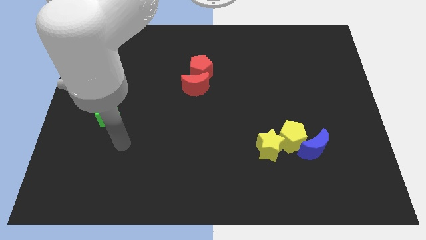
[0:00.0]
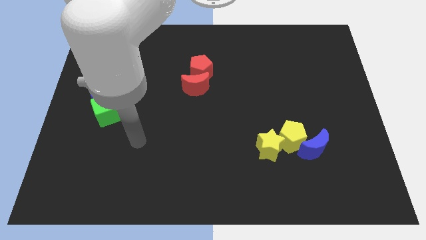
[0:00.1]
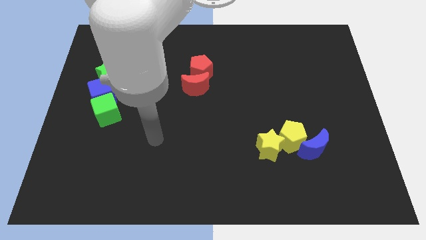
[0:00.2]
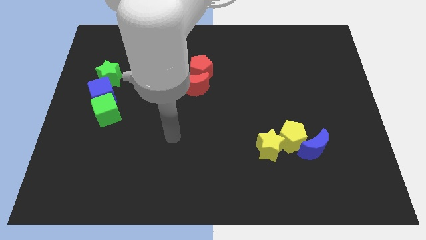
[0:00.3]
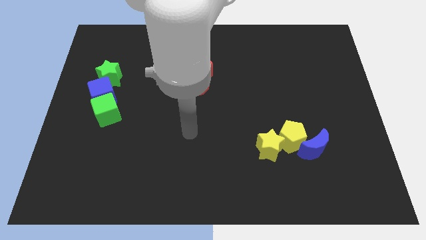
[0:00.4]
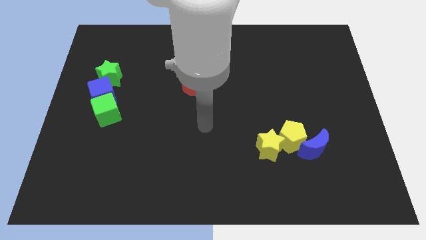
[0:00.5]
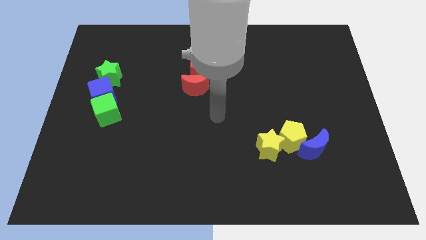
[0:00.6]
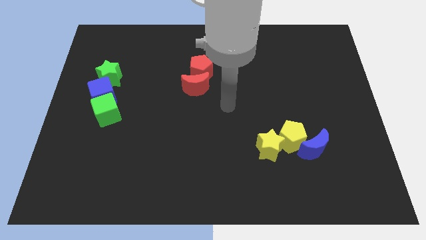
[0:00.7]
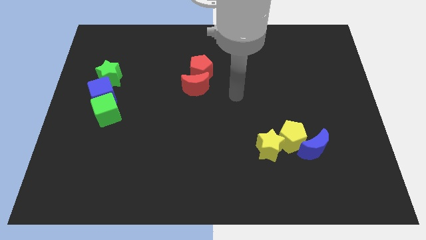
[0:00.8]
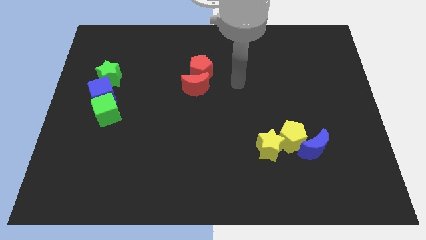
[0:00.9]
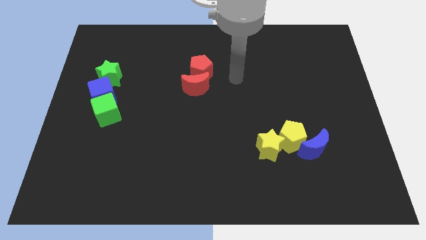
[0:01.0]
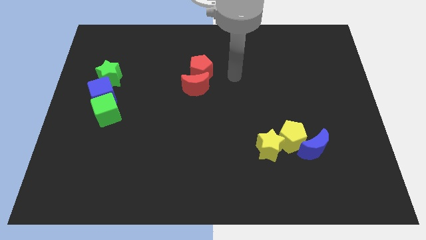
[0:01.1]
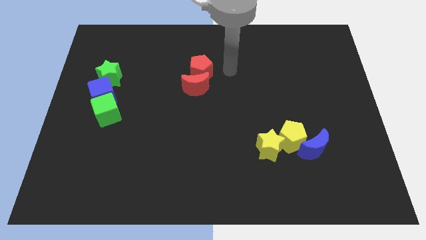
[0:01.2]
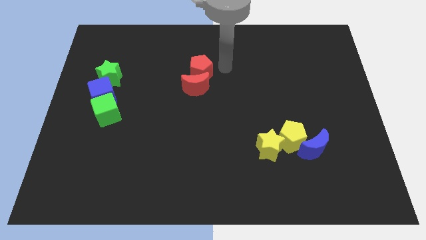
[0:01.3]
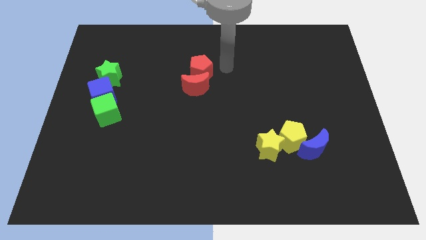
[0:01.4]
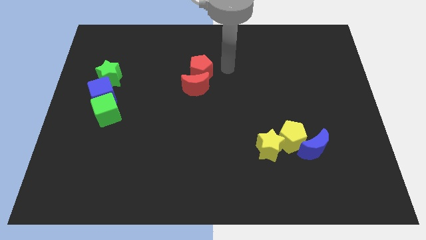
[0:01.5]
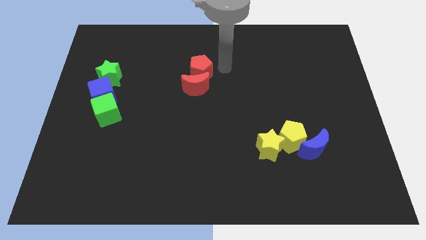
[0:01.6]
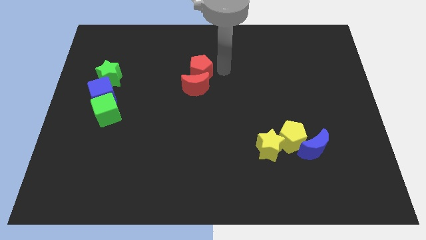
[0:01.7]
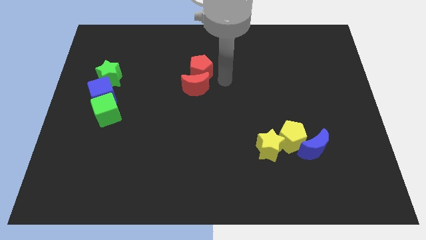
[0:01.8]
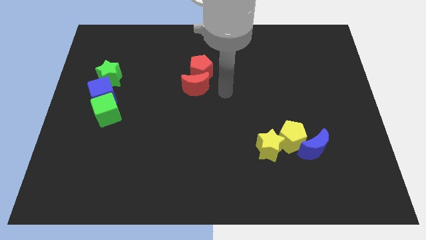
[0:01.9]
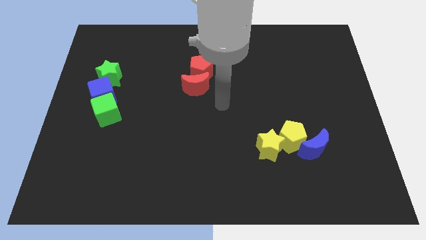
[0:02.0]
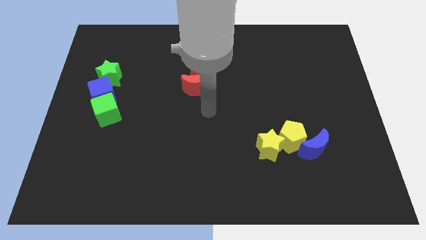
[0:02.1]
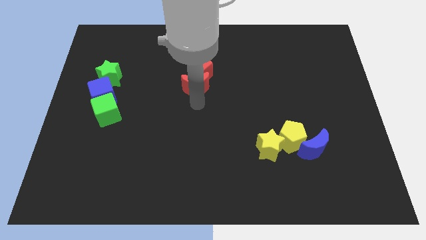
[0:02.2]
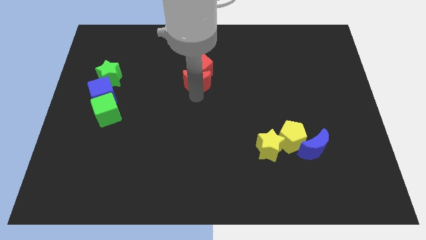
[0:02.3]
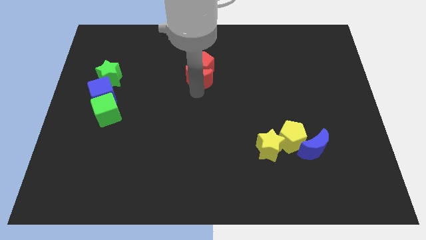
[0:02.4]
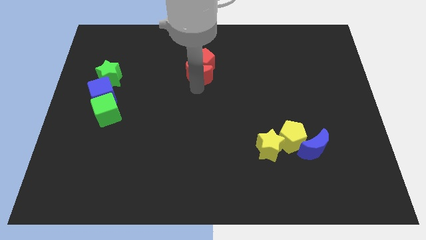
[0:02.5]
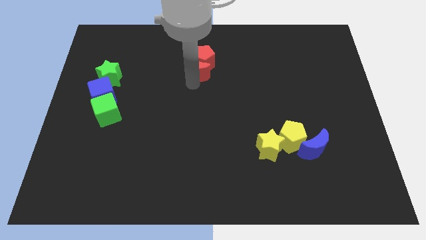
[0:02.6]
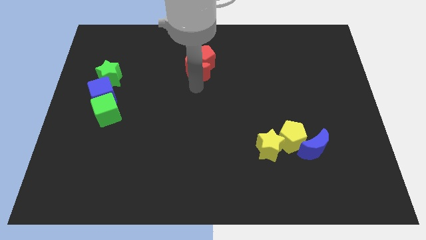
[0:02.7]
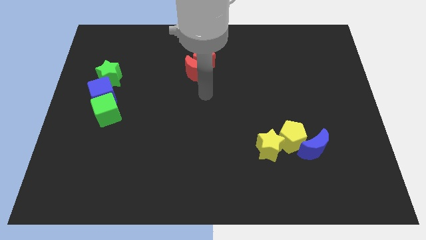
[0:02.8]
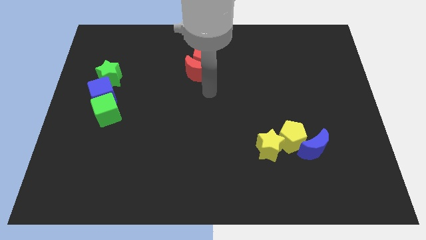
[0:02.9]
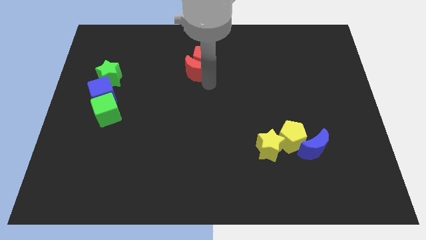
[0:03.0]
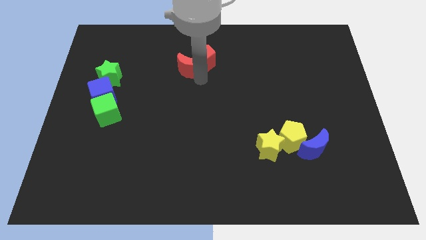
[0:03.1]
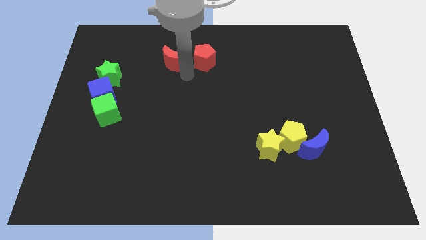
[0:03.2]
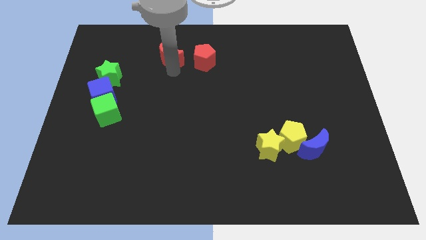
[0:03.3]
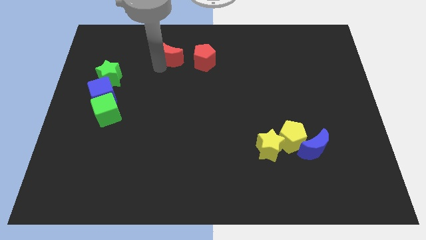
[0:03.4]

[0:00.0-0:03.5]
separate the red pentagon and the red moon

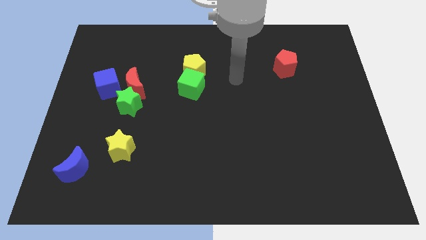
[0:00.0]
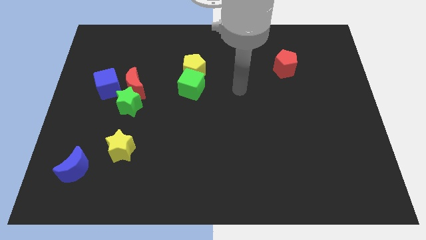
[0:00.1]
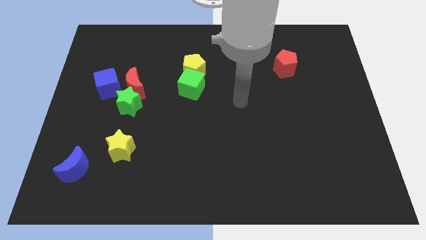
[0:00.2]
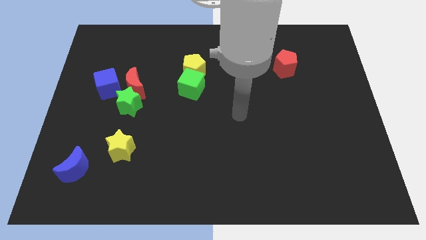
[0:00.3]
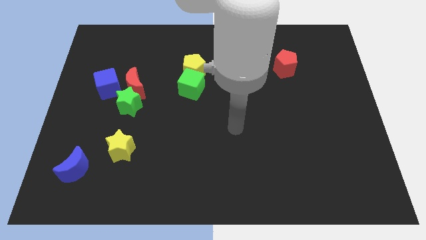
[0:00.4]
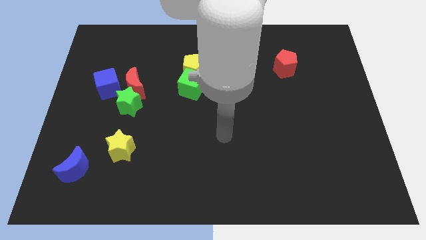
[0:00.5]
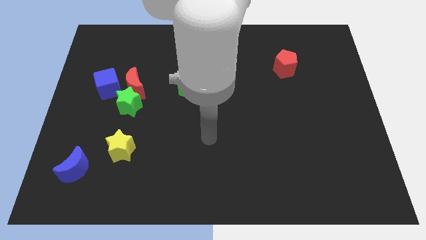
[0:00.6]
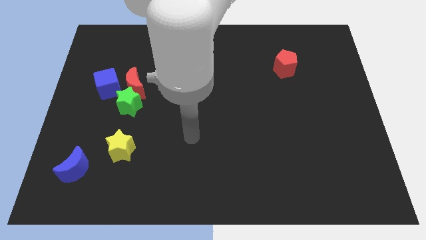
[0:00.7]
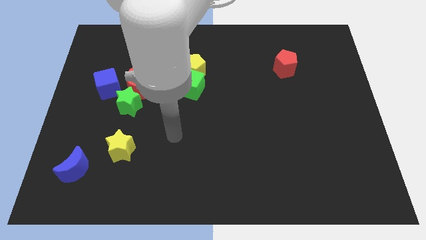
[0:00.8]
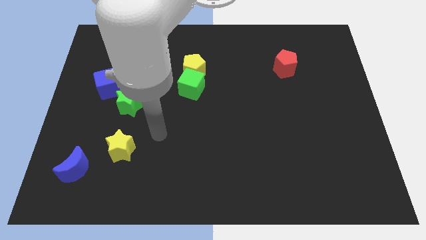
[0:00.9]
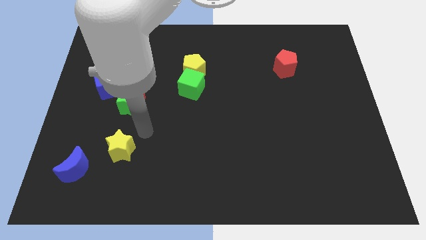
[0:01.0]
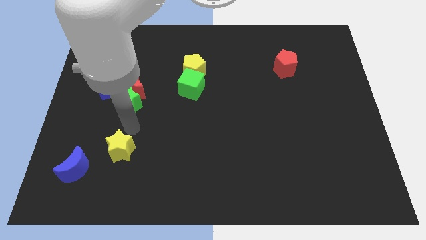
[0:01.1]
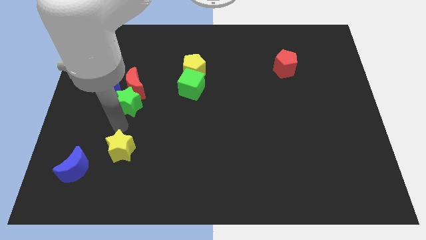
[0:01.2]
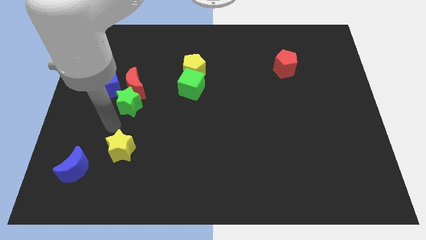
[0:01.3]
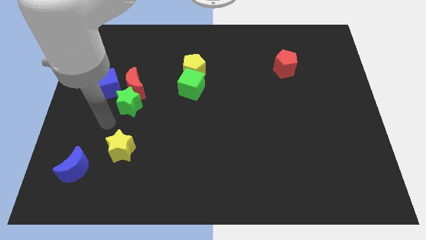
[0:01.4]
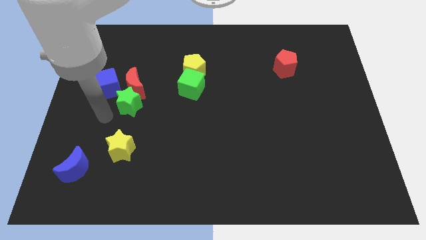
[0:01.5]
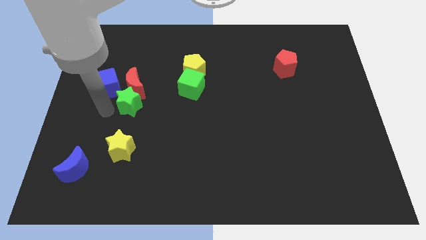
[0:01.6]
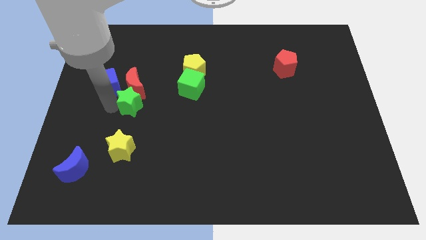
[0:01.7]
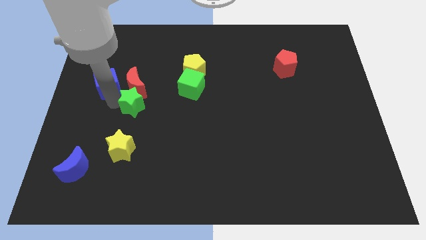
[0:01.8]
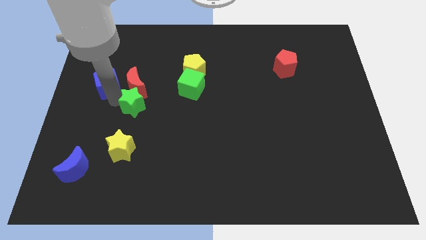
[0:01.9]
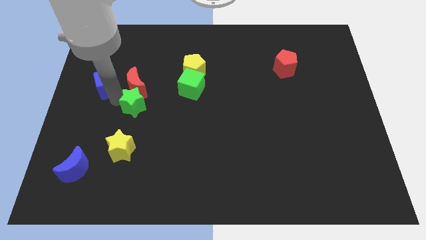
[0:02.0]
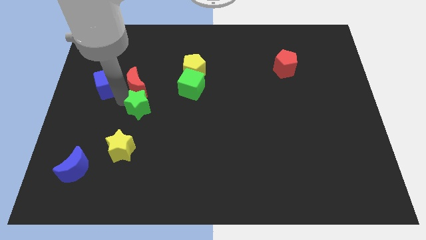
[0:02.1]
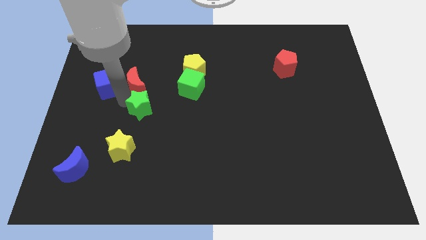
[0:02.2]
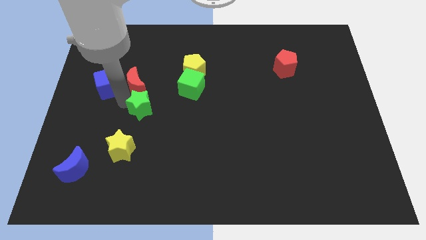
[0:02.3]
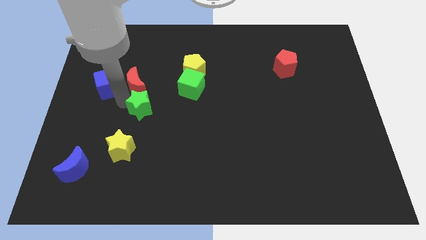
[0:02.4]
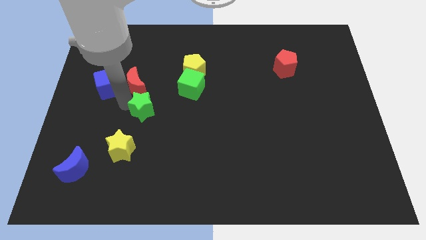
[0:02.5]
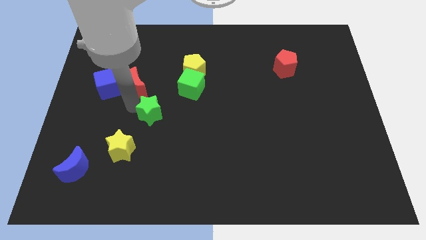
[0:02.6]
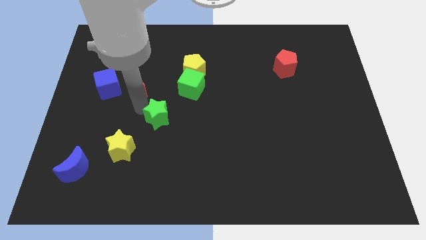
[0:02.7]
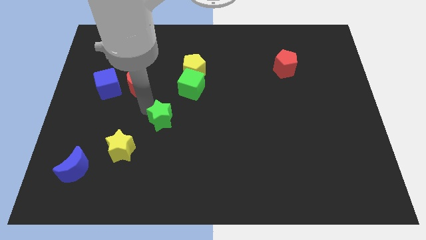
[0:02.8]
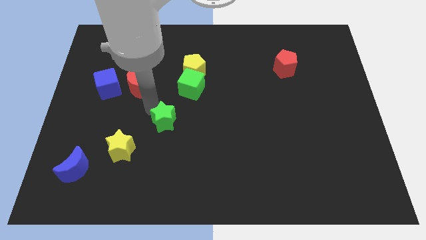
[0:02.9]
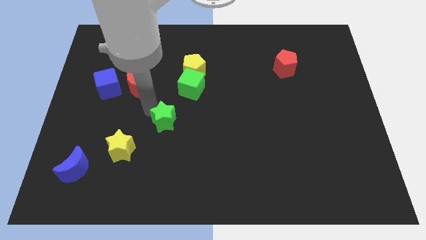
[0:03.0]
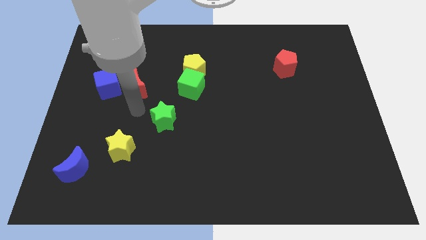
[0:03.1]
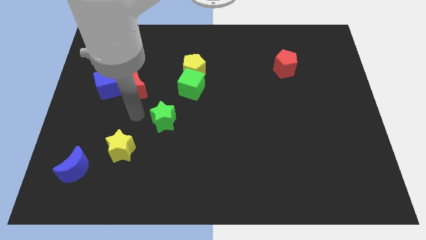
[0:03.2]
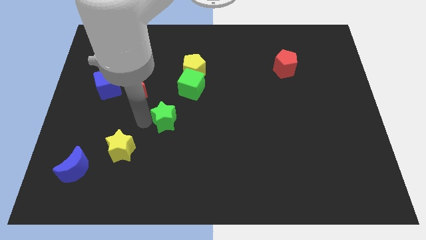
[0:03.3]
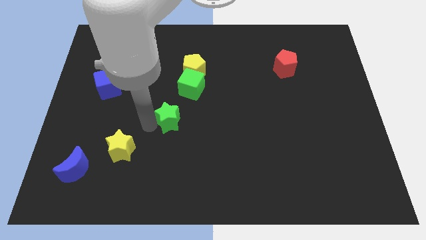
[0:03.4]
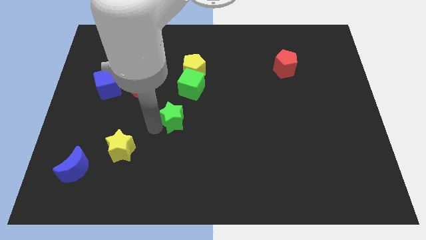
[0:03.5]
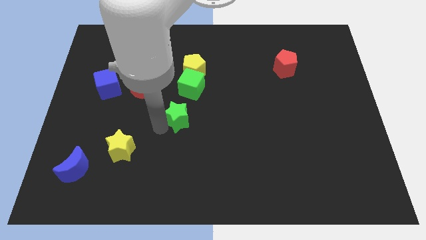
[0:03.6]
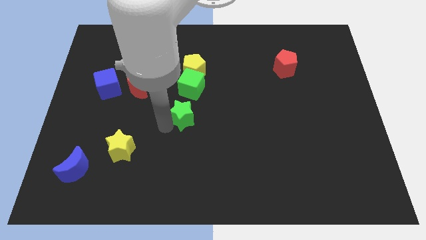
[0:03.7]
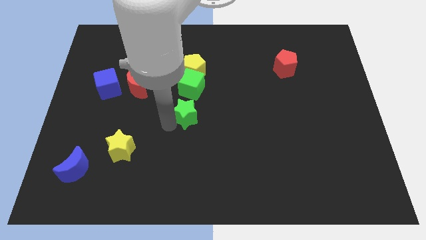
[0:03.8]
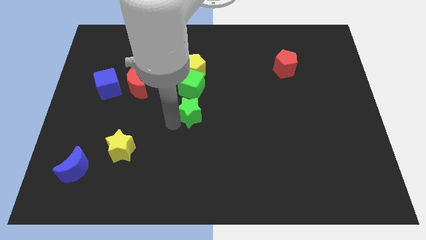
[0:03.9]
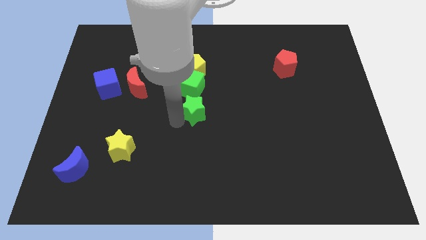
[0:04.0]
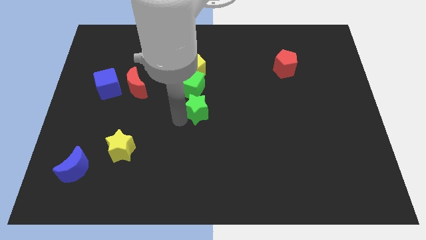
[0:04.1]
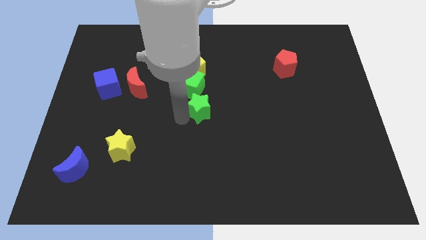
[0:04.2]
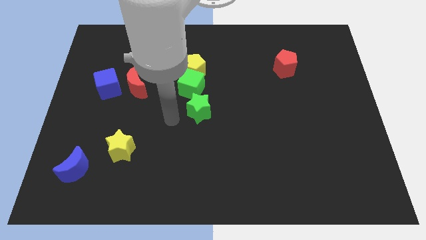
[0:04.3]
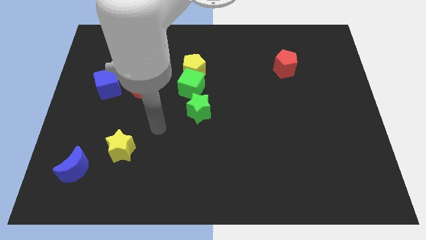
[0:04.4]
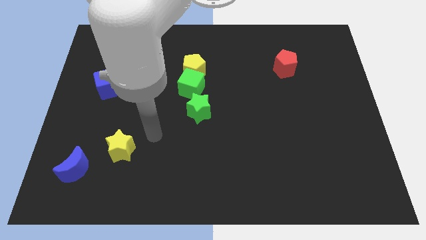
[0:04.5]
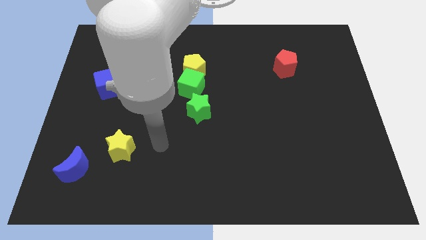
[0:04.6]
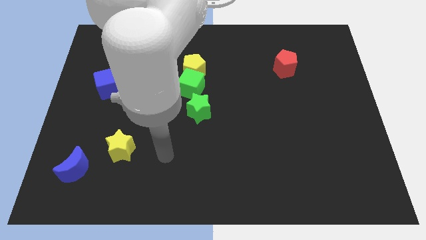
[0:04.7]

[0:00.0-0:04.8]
move the green star to the bottom left side of the green cube

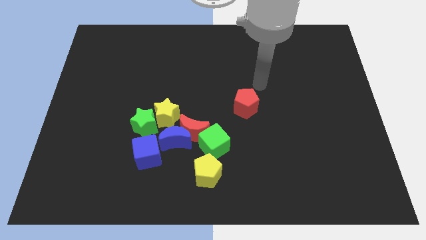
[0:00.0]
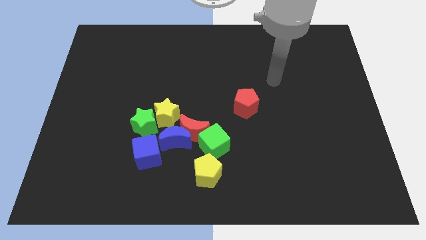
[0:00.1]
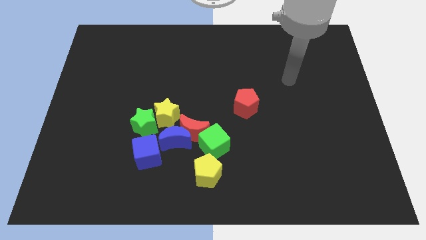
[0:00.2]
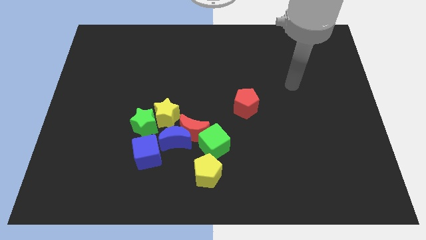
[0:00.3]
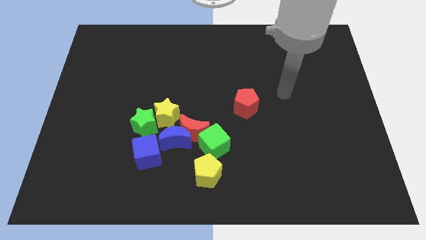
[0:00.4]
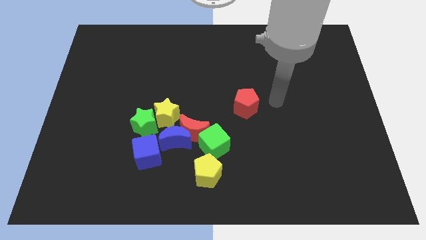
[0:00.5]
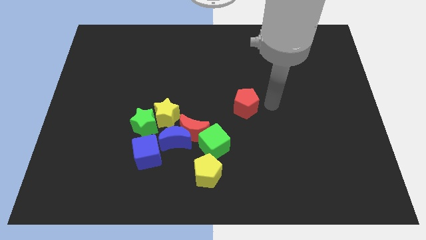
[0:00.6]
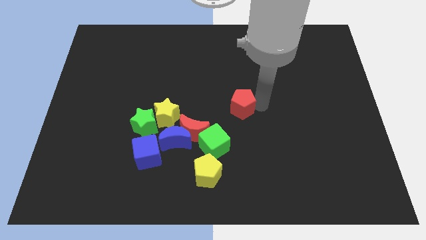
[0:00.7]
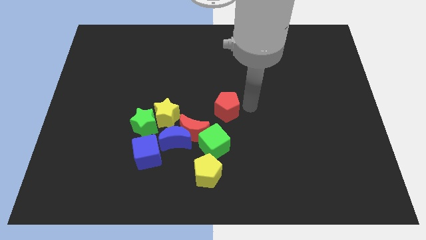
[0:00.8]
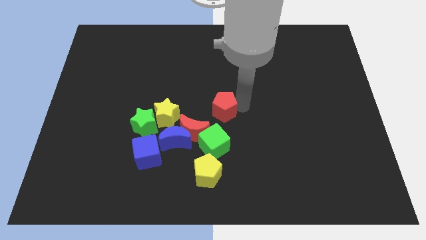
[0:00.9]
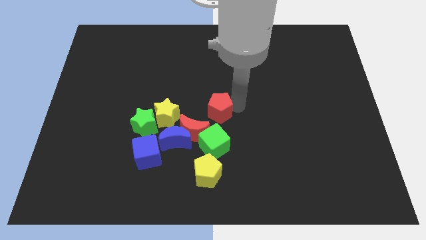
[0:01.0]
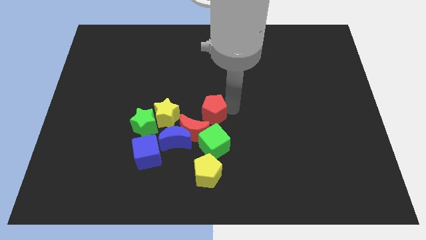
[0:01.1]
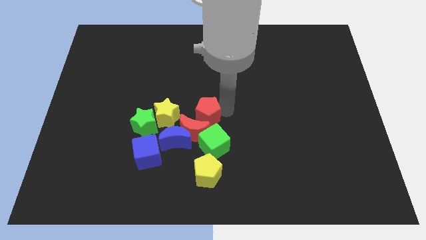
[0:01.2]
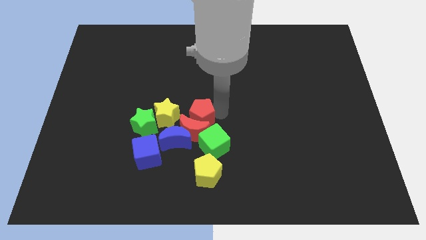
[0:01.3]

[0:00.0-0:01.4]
push the red pentagon close to the red moon
